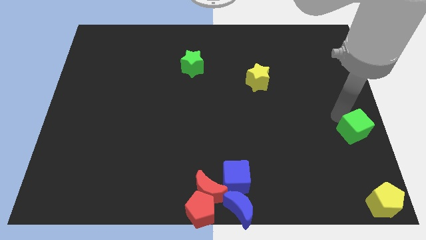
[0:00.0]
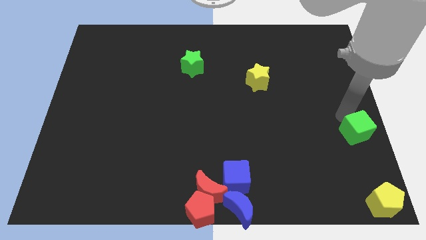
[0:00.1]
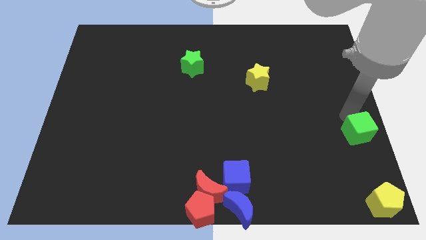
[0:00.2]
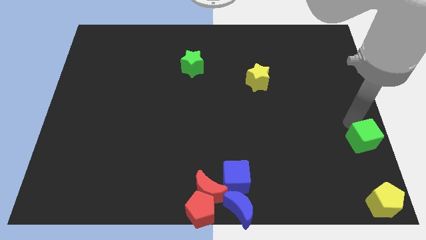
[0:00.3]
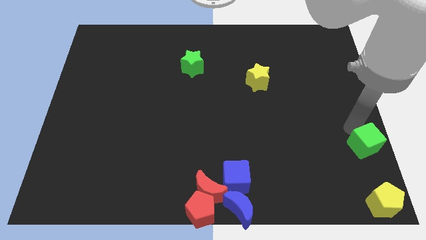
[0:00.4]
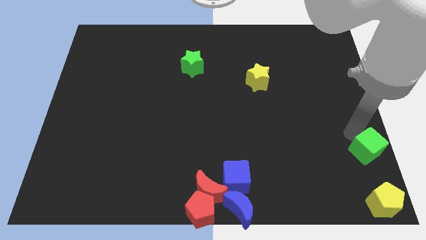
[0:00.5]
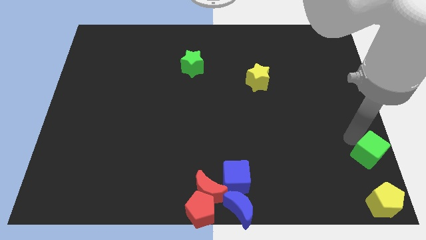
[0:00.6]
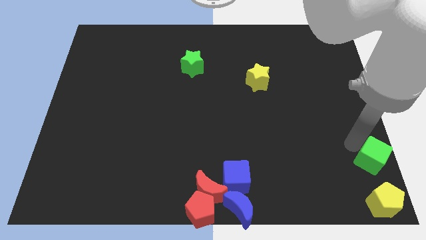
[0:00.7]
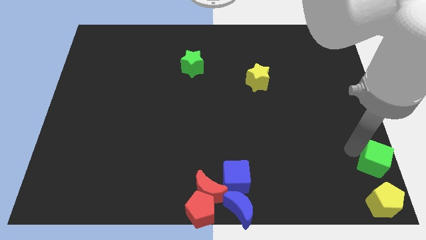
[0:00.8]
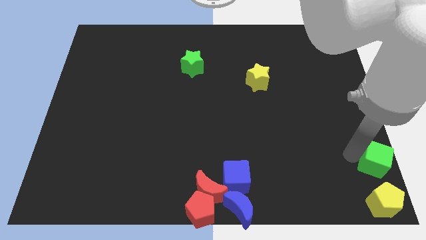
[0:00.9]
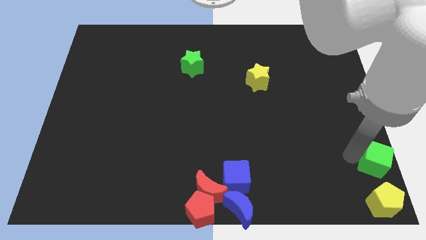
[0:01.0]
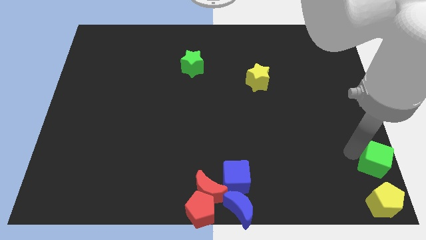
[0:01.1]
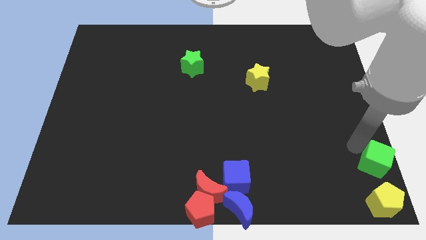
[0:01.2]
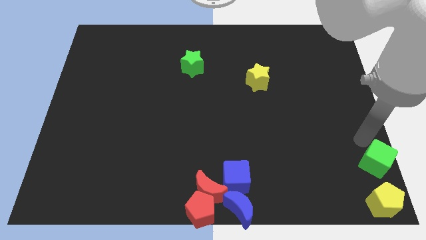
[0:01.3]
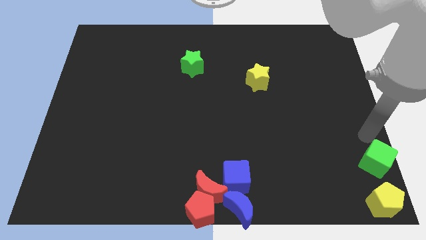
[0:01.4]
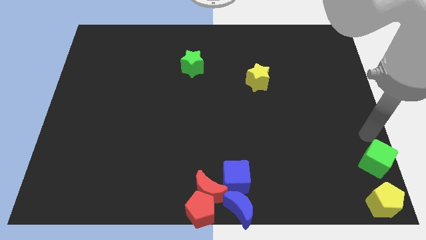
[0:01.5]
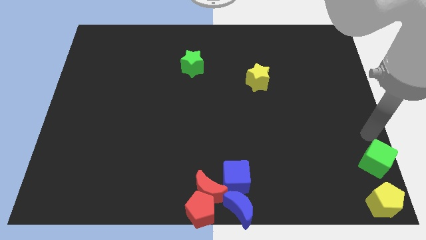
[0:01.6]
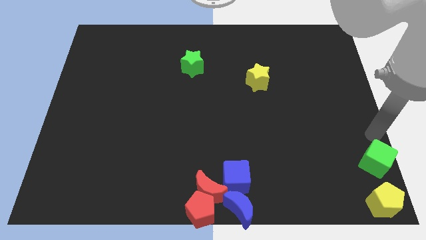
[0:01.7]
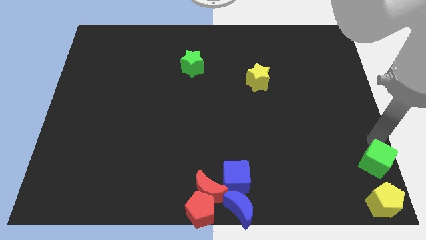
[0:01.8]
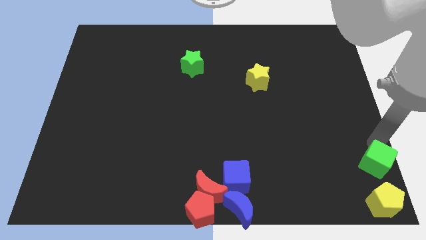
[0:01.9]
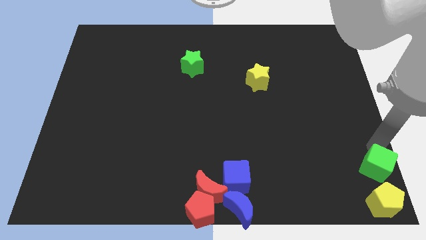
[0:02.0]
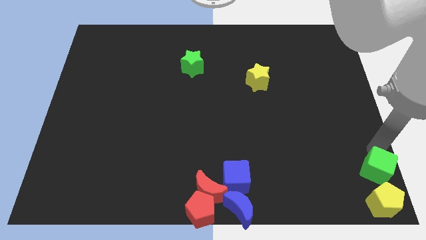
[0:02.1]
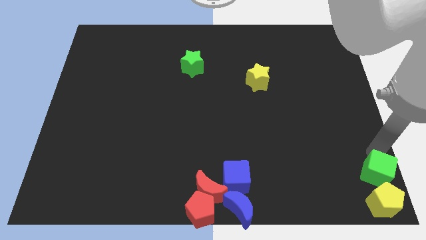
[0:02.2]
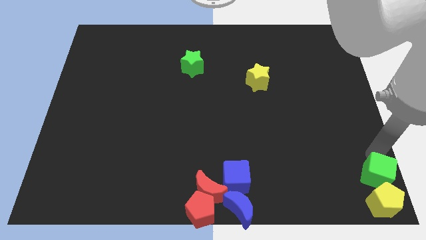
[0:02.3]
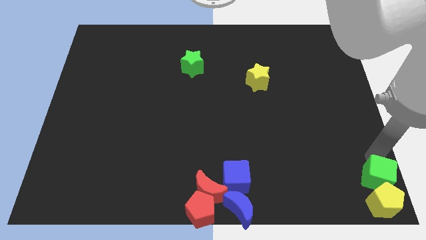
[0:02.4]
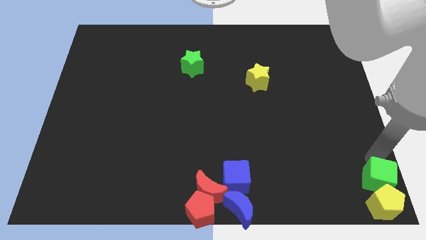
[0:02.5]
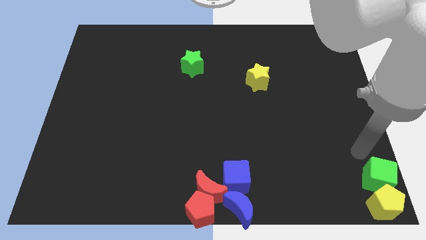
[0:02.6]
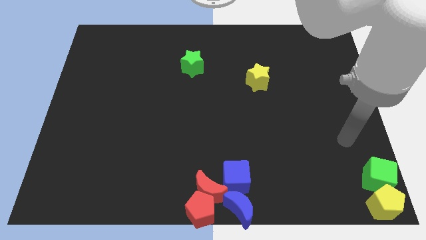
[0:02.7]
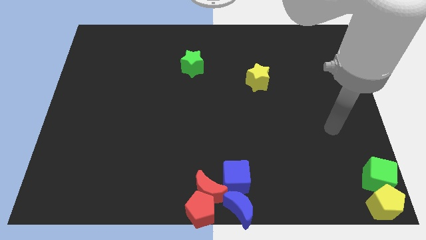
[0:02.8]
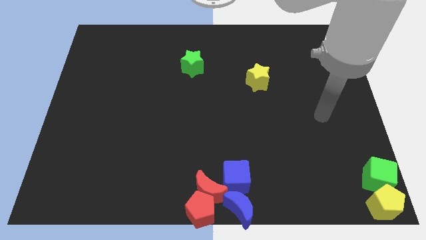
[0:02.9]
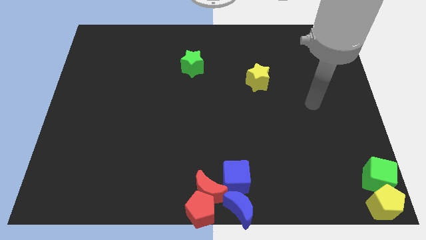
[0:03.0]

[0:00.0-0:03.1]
put the green cube at the top of the yellow pentagon

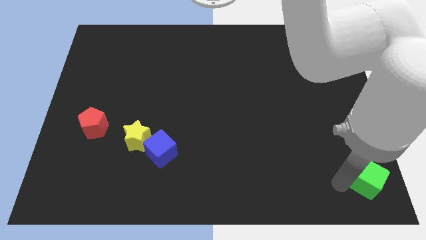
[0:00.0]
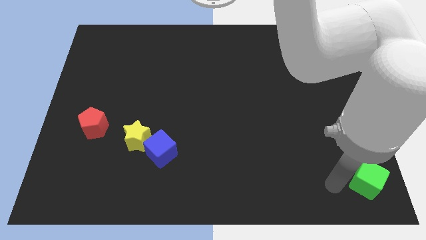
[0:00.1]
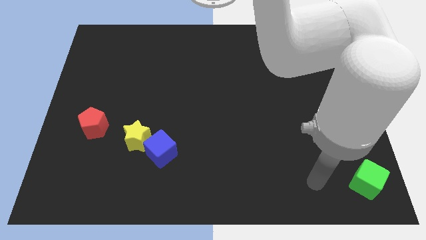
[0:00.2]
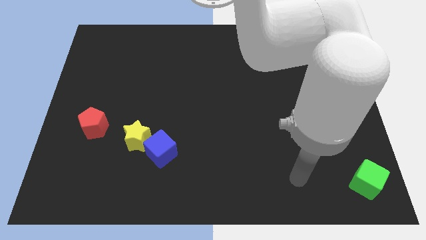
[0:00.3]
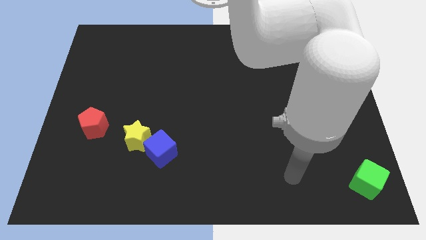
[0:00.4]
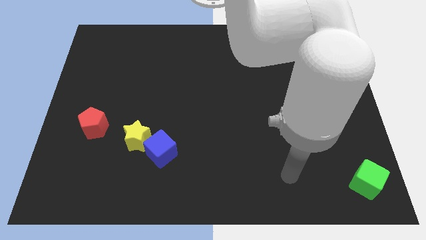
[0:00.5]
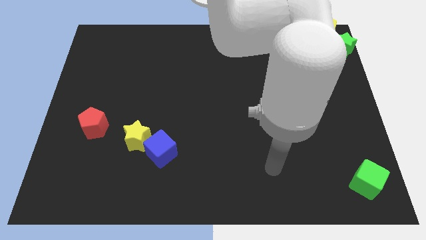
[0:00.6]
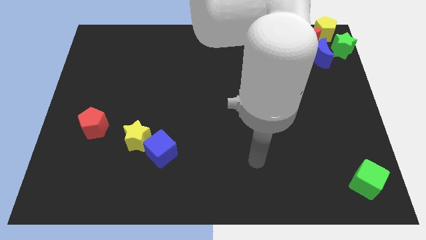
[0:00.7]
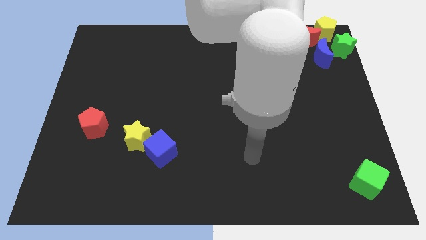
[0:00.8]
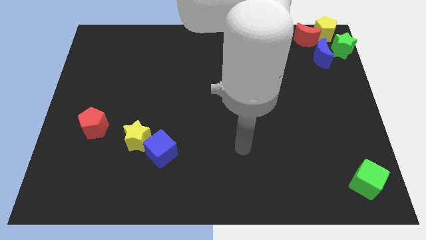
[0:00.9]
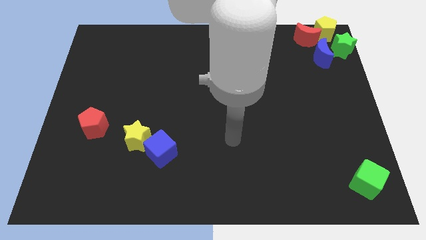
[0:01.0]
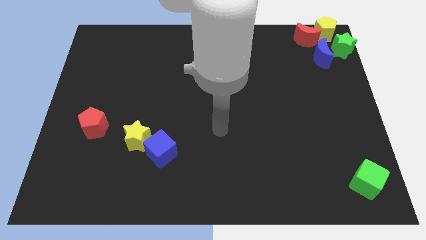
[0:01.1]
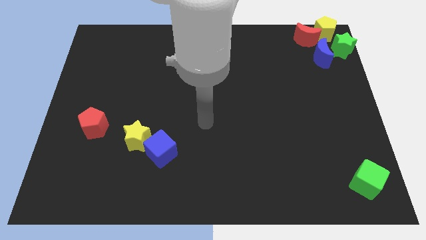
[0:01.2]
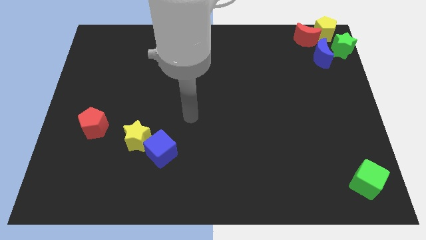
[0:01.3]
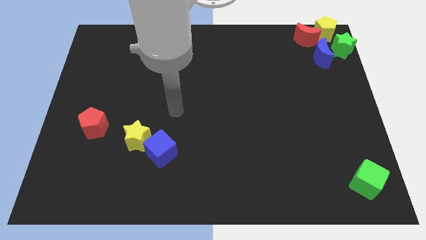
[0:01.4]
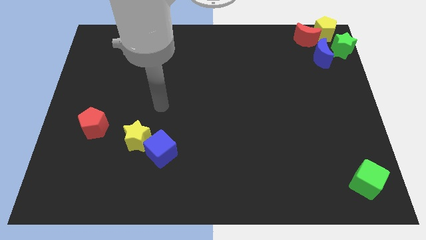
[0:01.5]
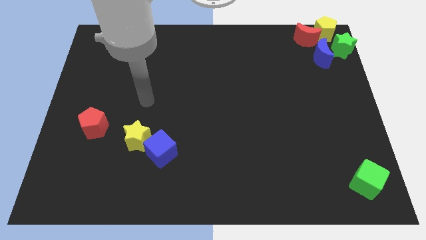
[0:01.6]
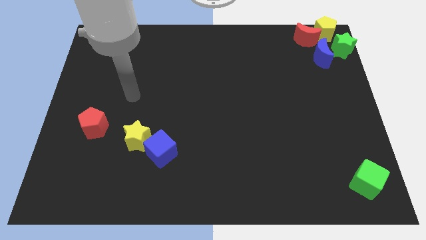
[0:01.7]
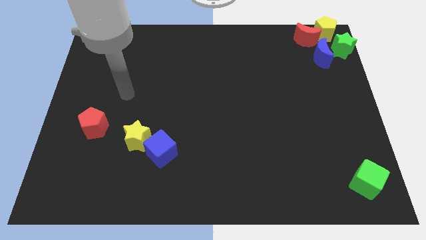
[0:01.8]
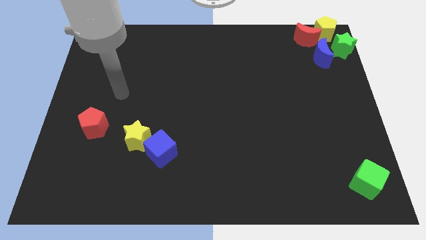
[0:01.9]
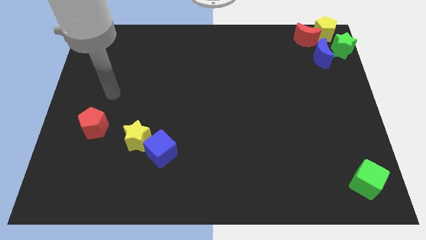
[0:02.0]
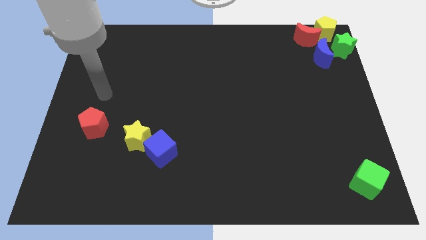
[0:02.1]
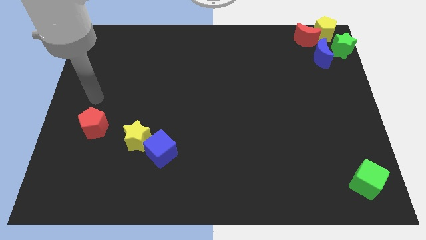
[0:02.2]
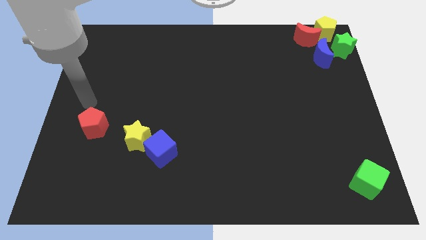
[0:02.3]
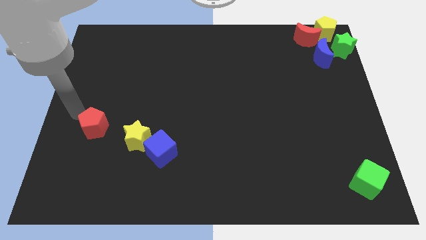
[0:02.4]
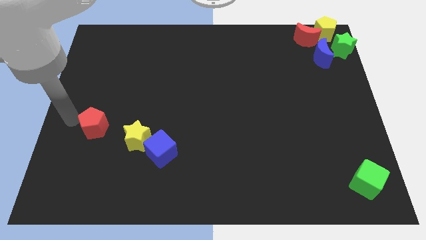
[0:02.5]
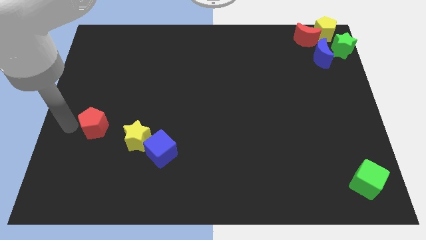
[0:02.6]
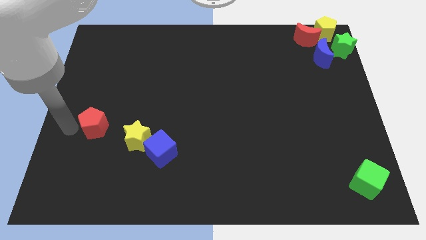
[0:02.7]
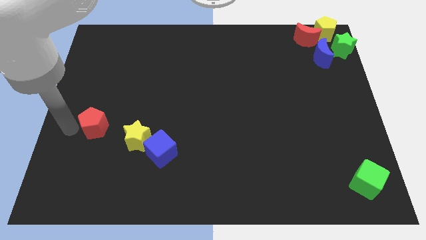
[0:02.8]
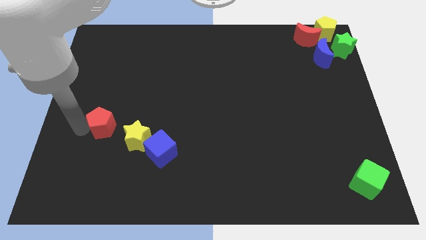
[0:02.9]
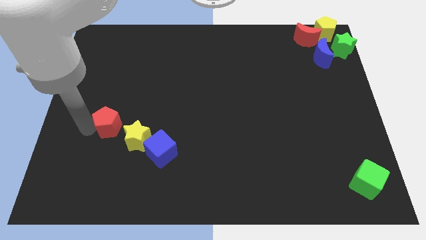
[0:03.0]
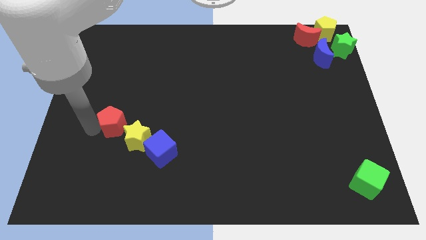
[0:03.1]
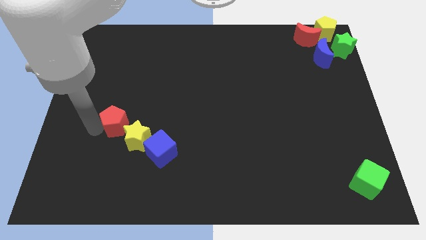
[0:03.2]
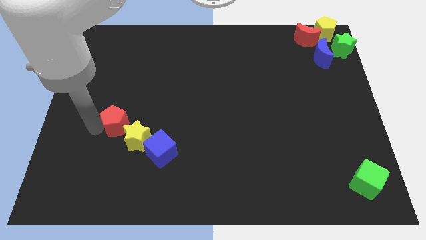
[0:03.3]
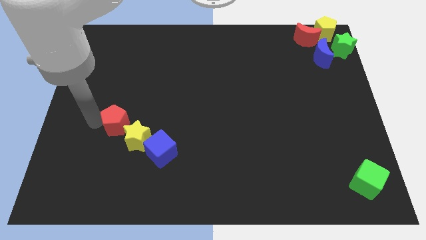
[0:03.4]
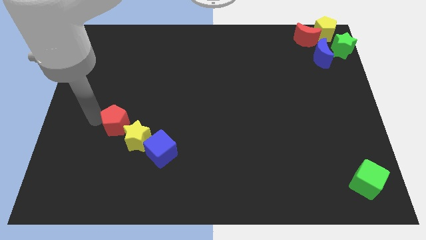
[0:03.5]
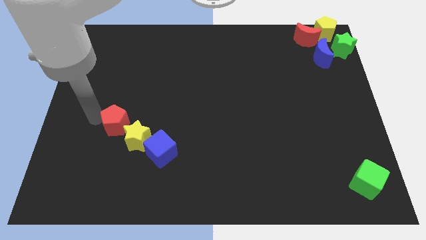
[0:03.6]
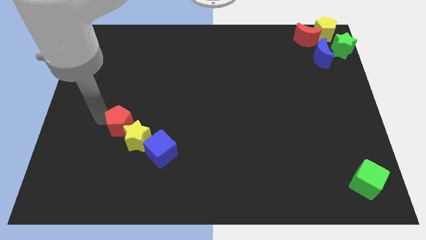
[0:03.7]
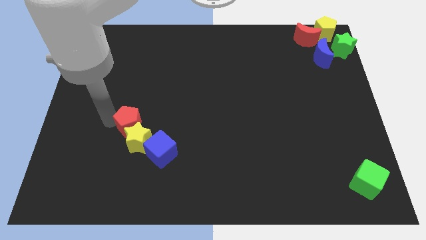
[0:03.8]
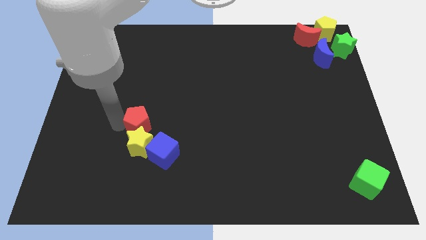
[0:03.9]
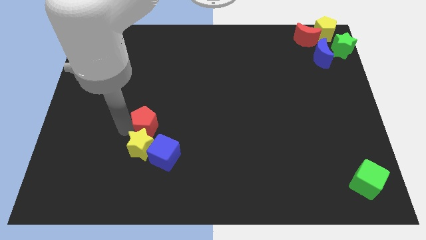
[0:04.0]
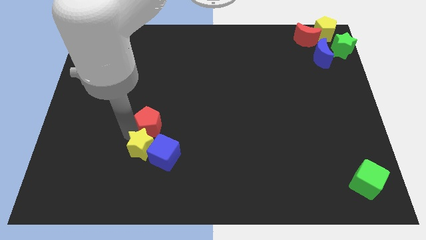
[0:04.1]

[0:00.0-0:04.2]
slide the red pentagon into the top side of the yellow star

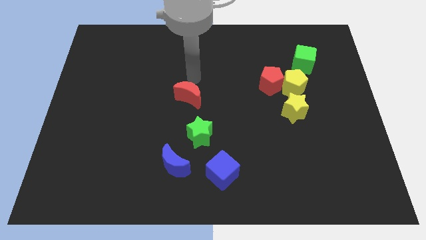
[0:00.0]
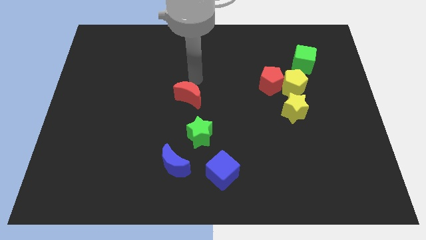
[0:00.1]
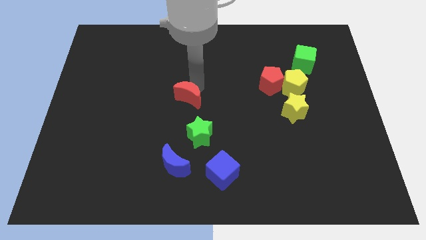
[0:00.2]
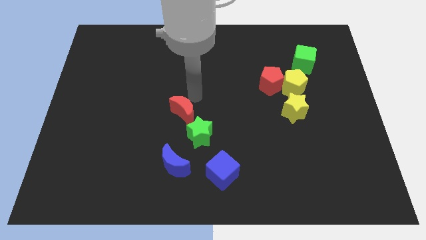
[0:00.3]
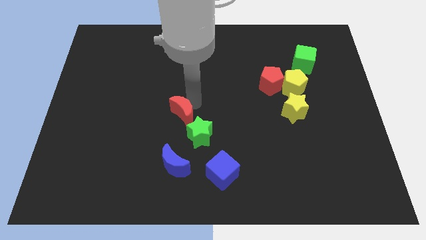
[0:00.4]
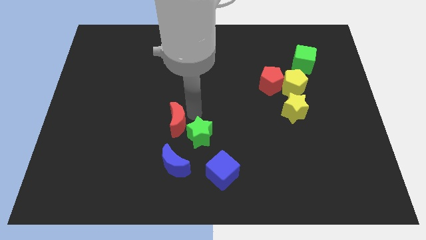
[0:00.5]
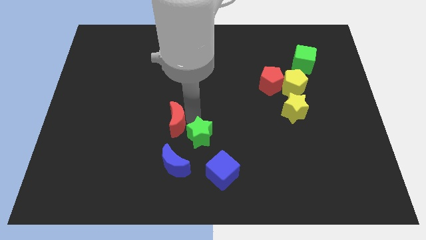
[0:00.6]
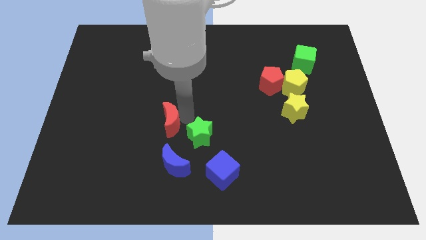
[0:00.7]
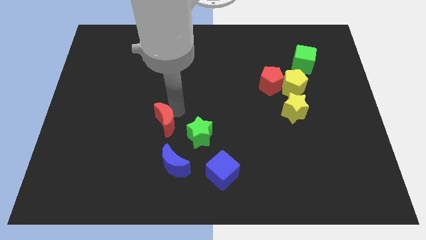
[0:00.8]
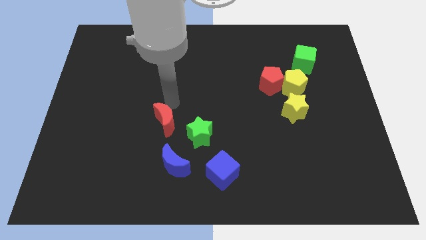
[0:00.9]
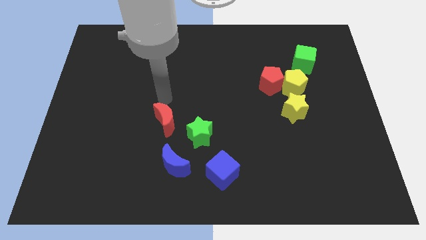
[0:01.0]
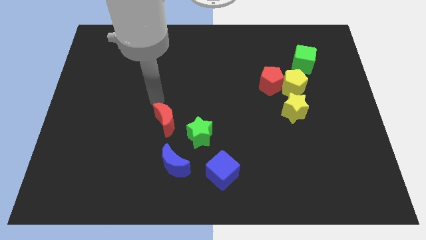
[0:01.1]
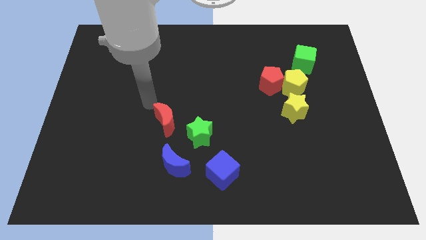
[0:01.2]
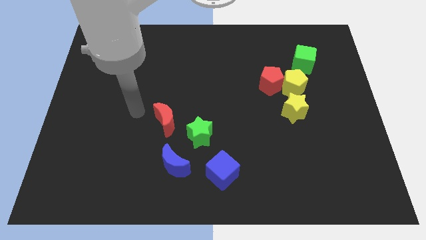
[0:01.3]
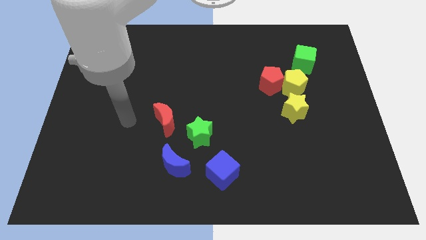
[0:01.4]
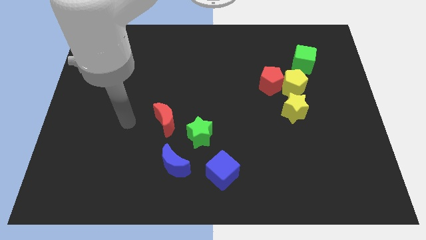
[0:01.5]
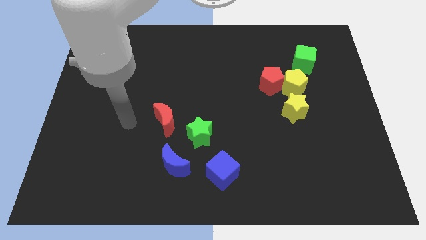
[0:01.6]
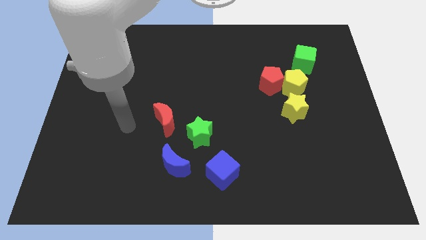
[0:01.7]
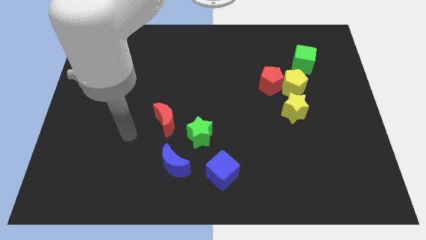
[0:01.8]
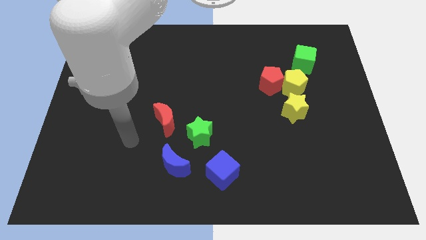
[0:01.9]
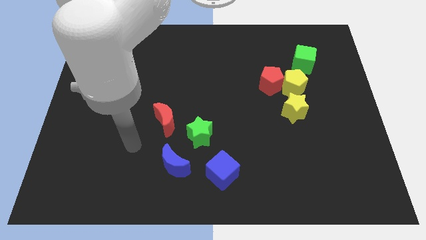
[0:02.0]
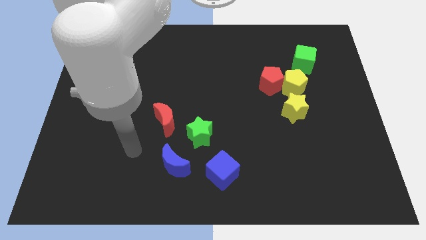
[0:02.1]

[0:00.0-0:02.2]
drag the red crescent towards left
